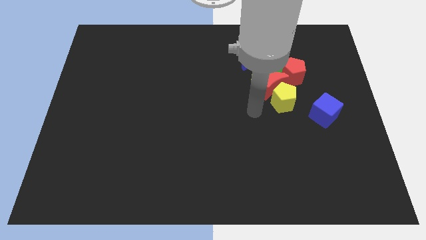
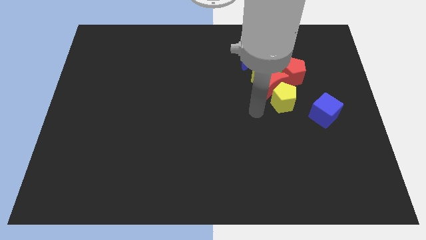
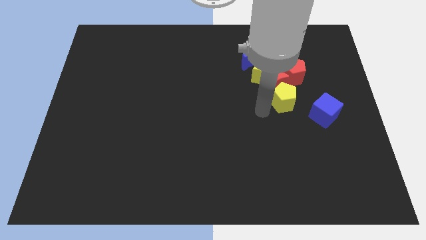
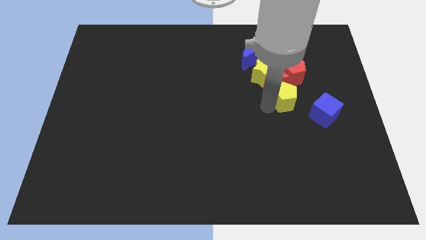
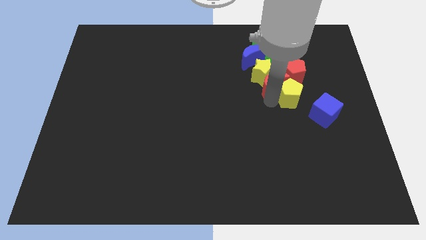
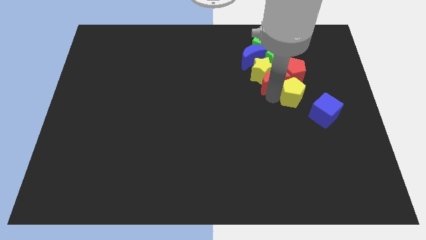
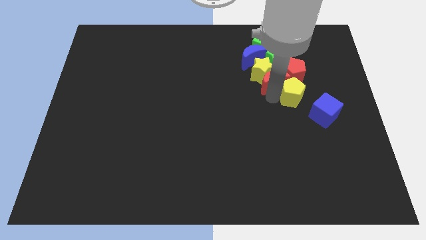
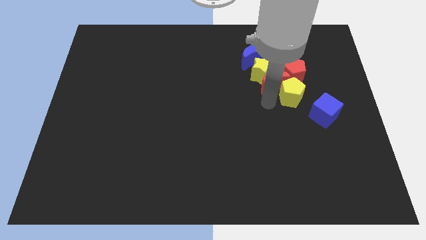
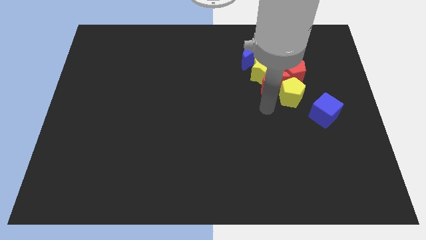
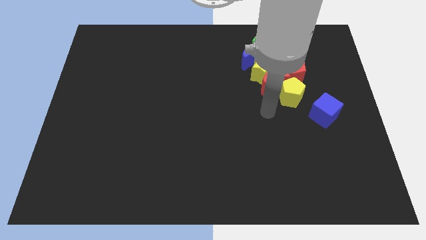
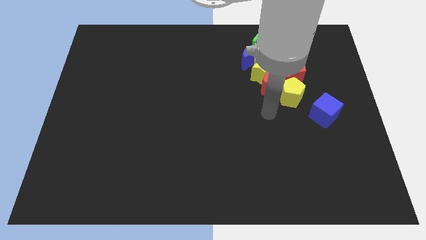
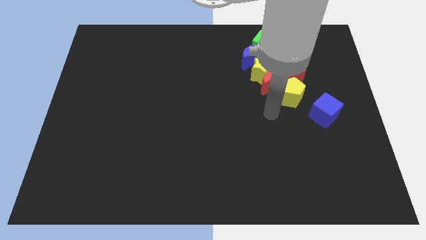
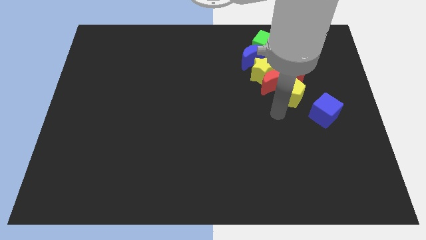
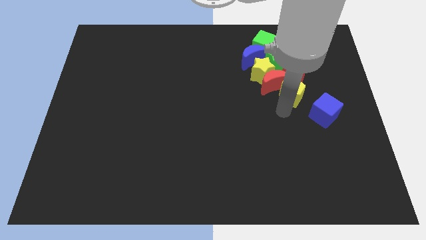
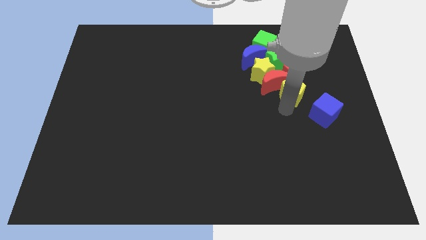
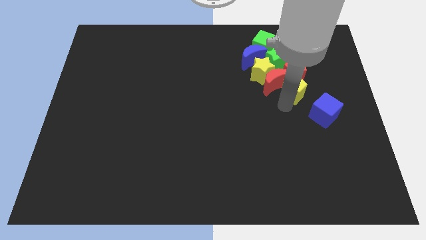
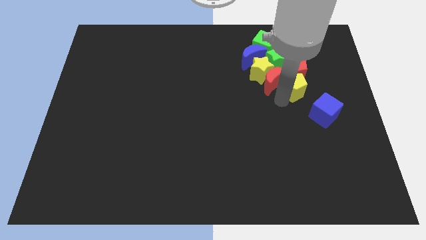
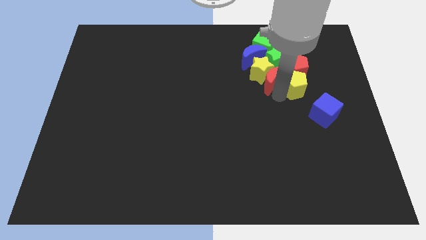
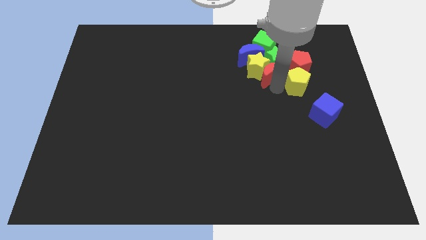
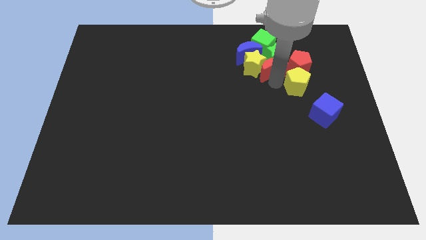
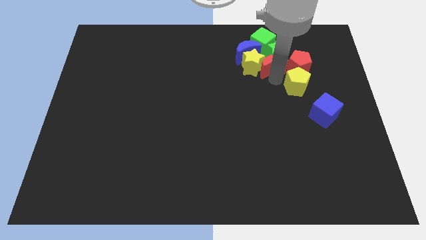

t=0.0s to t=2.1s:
push yellow pentagon into red pentagon

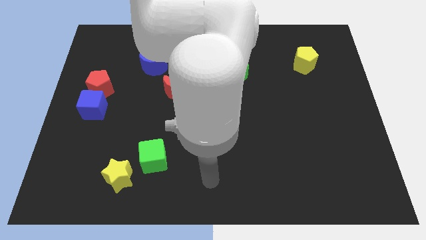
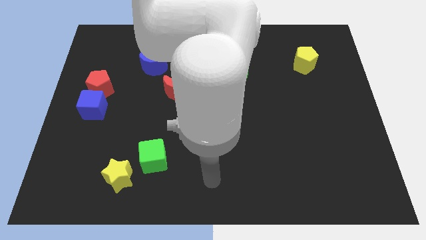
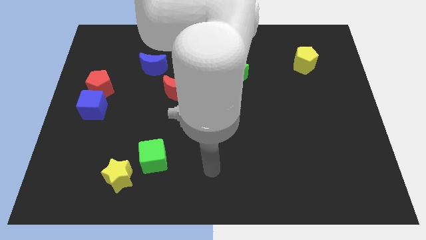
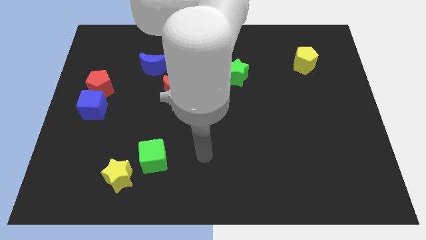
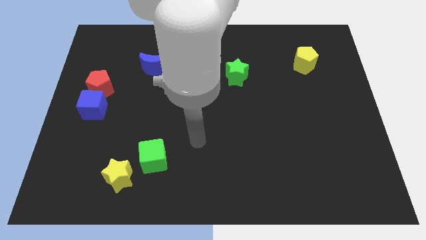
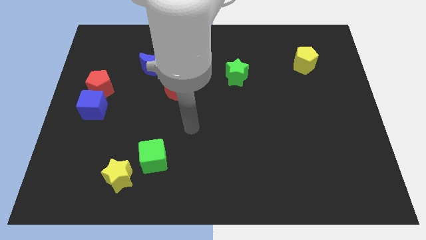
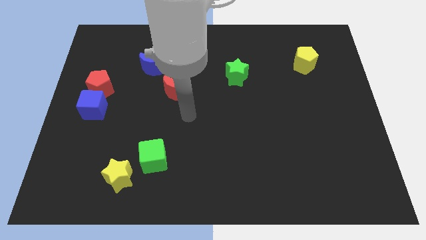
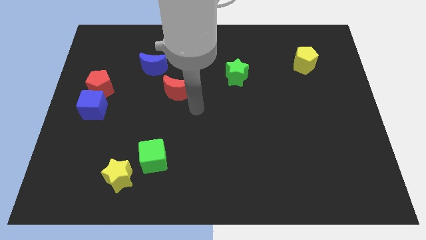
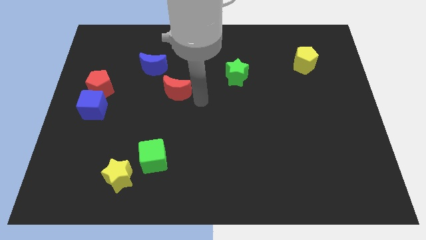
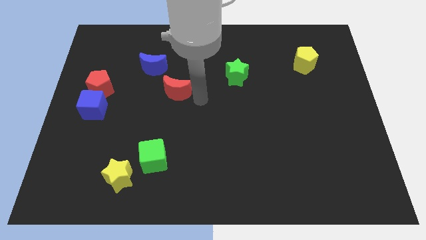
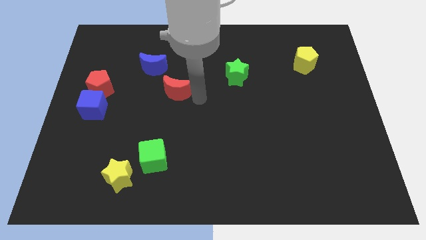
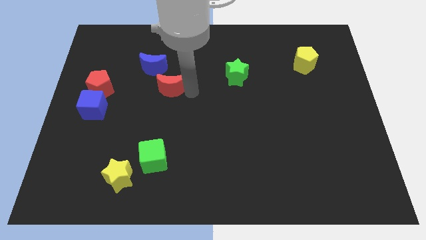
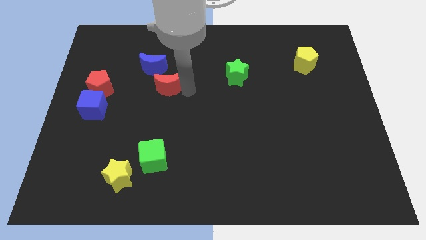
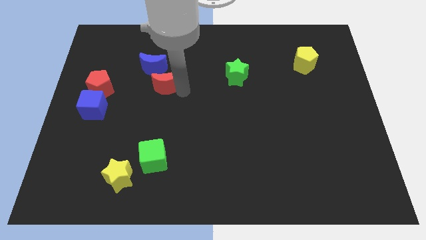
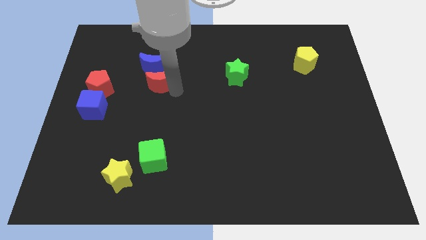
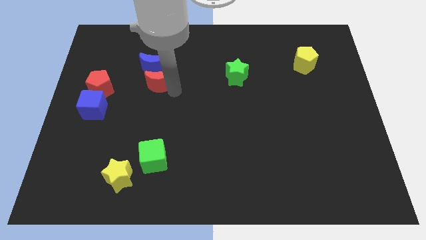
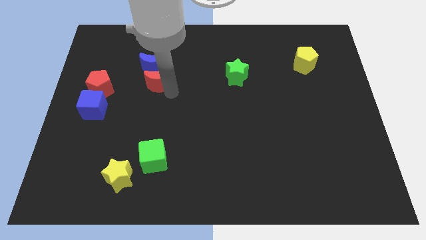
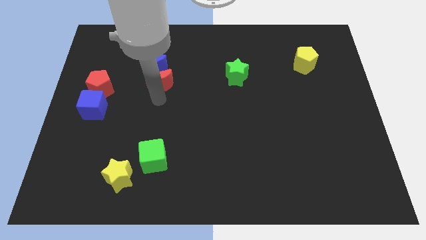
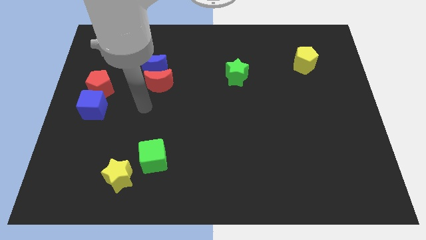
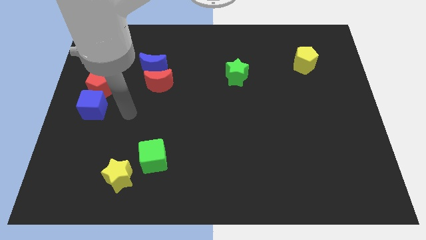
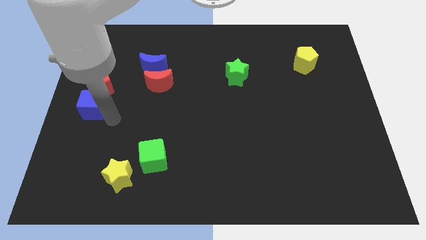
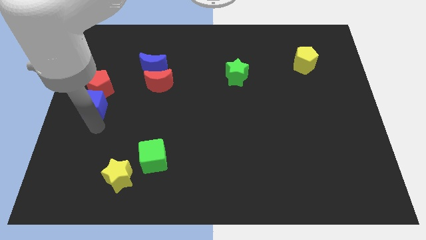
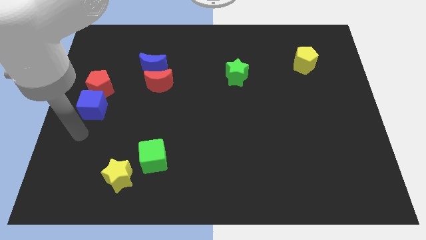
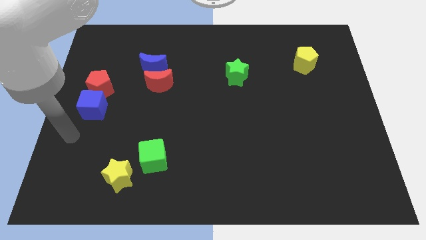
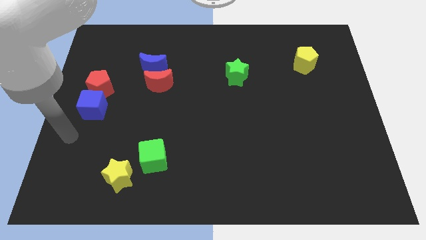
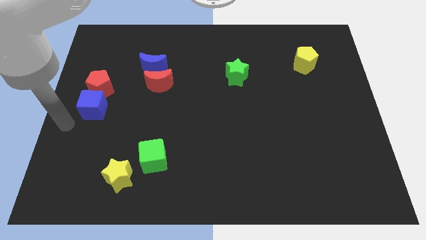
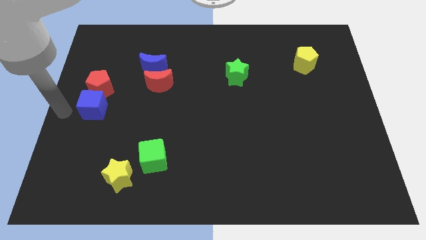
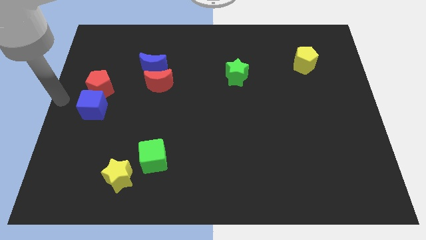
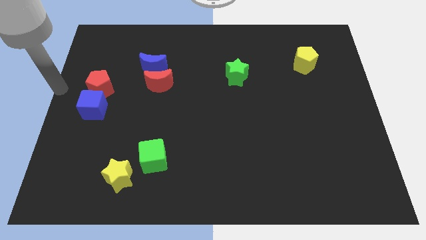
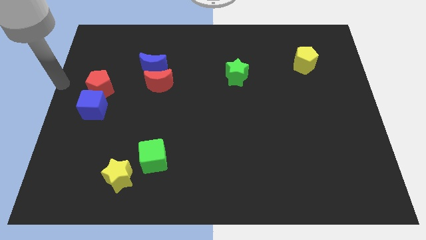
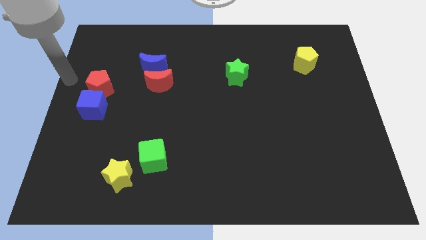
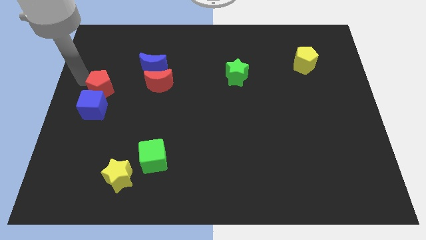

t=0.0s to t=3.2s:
place the red moon digonally bottom right to the blue moon

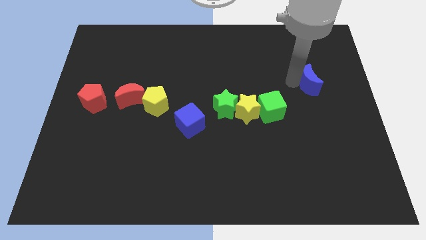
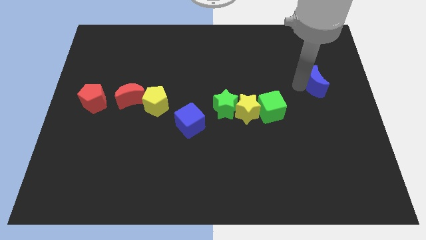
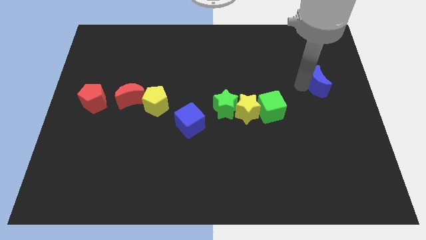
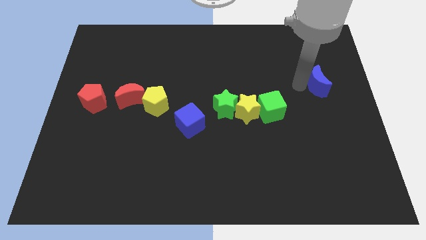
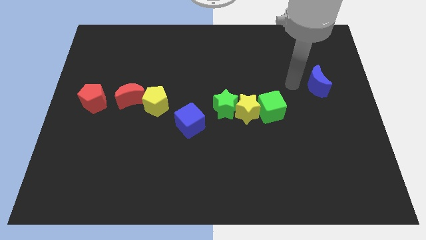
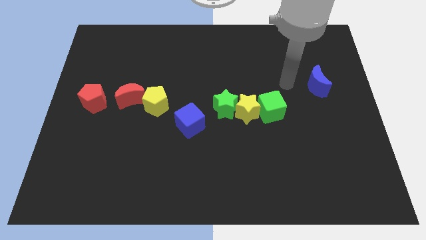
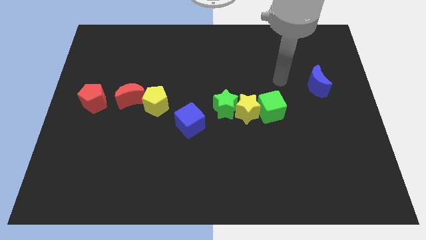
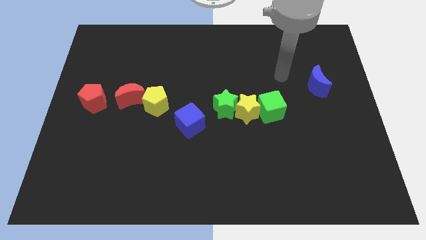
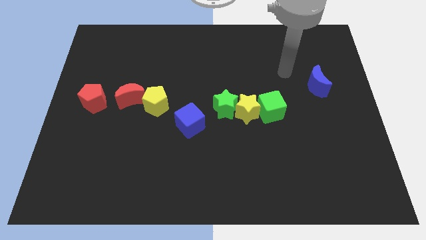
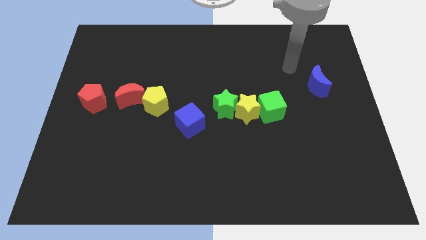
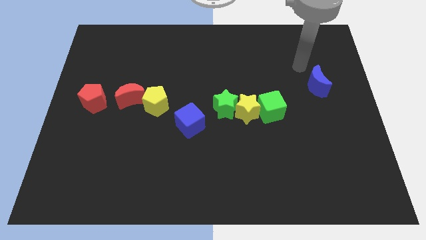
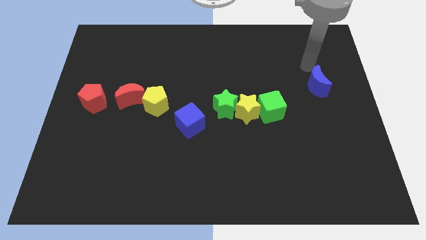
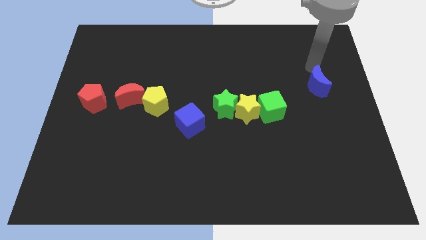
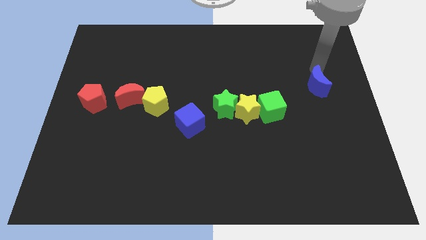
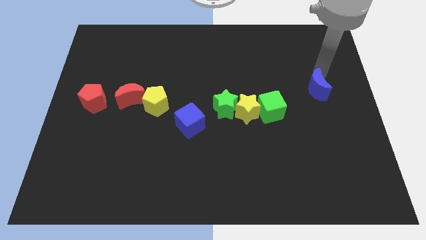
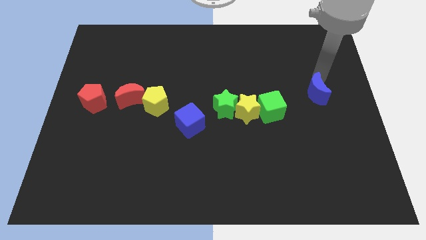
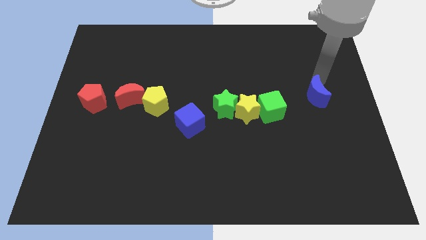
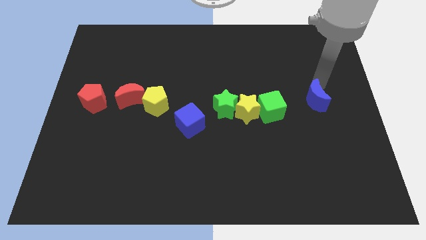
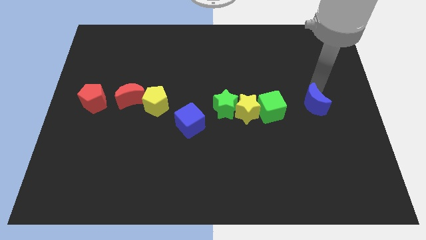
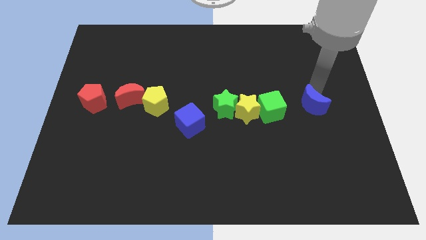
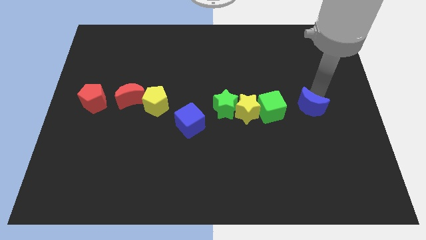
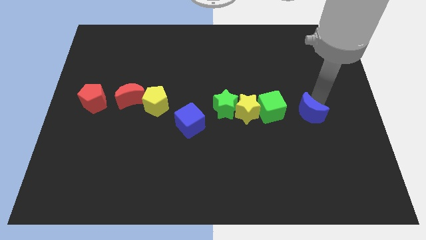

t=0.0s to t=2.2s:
slide blue moon to the right of green cube

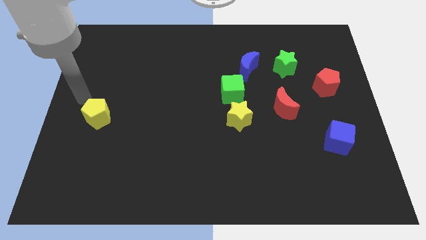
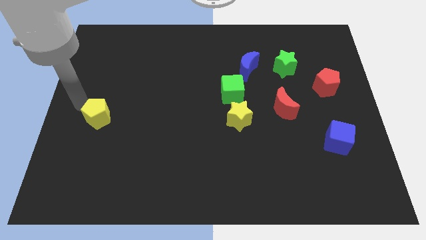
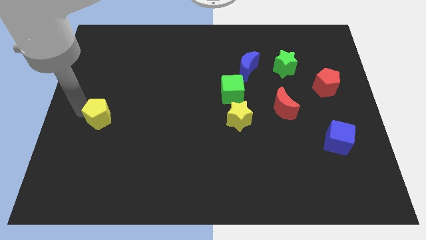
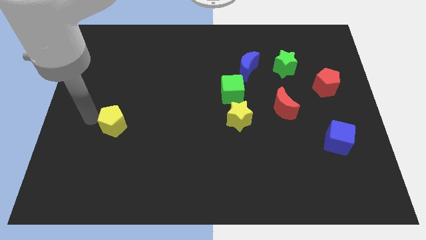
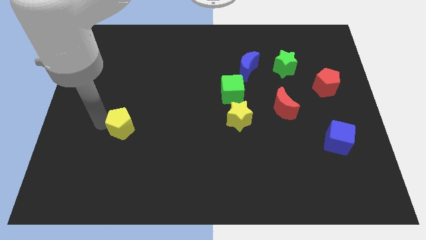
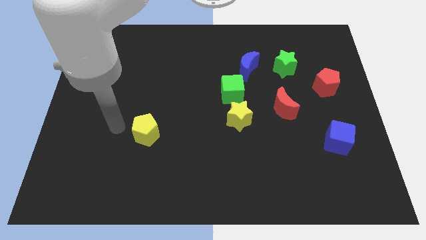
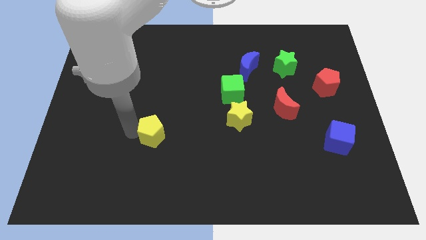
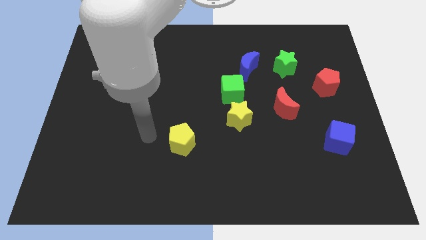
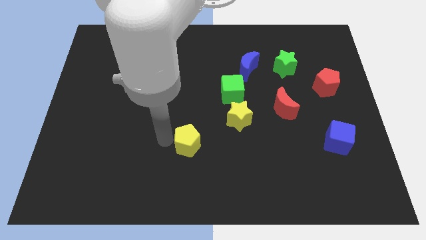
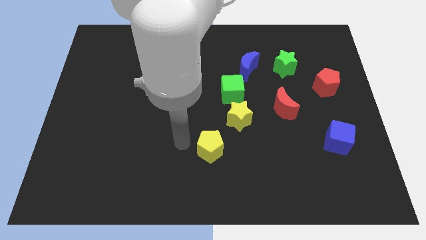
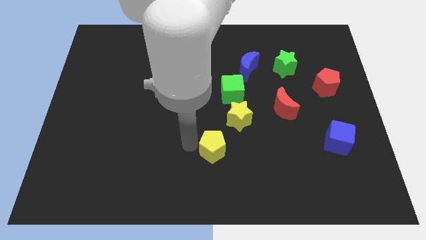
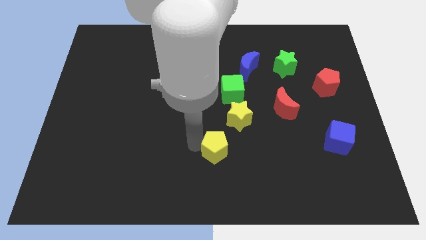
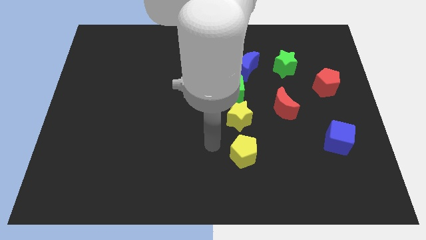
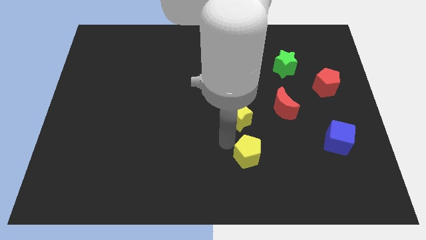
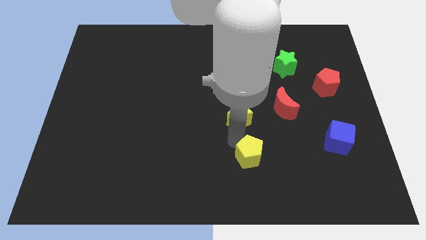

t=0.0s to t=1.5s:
move the yellow pentagon to the bottom side of the yellow star
